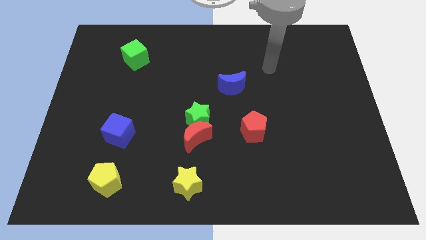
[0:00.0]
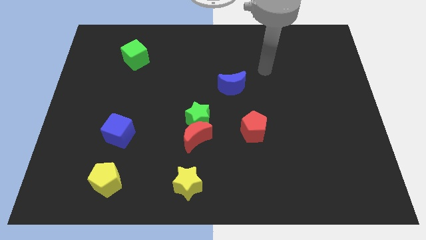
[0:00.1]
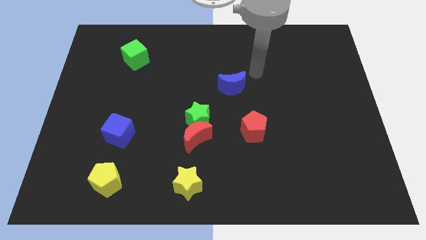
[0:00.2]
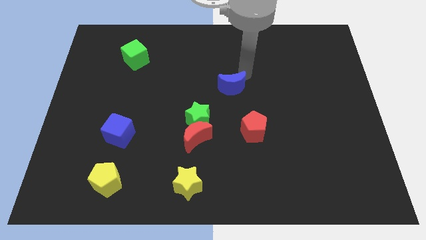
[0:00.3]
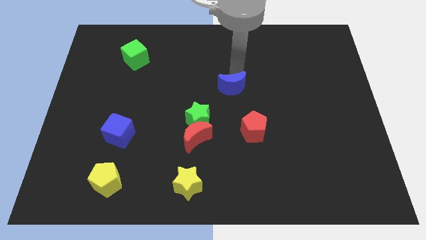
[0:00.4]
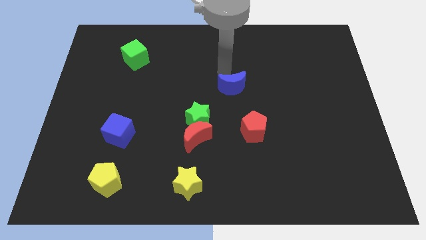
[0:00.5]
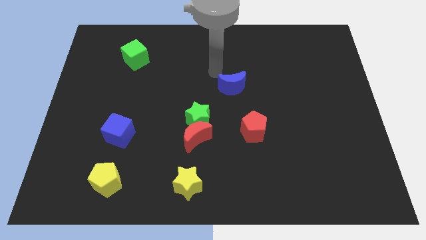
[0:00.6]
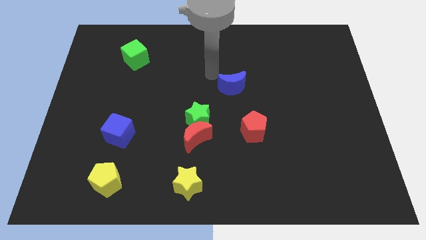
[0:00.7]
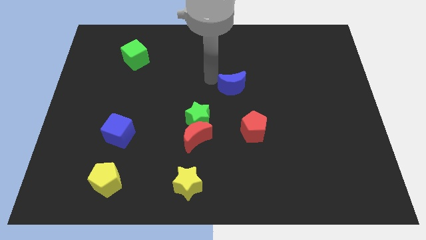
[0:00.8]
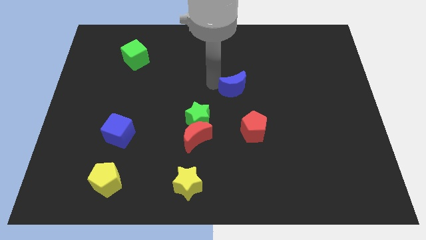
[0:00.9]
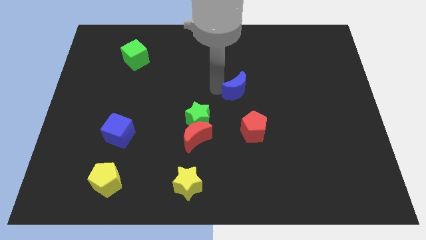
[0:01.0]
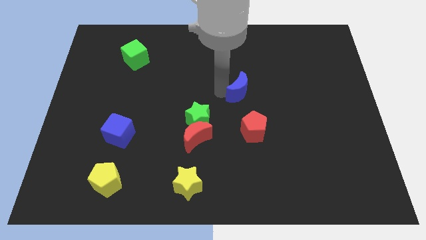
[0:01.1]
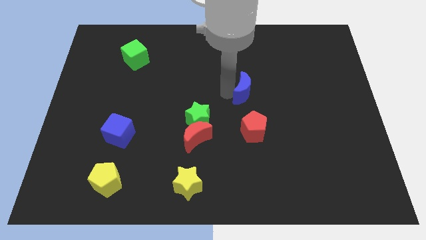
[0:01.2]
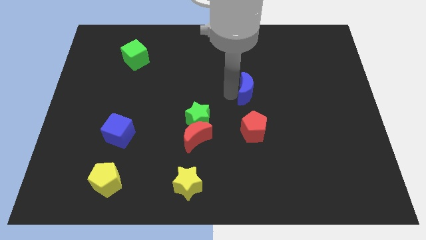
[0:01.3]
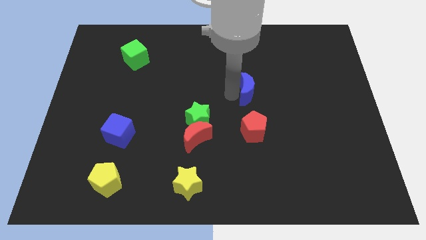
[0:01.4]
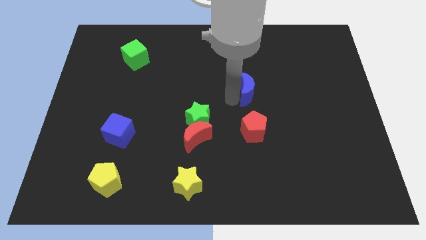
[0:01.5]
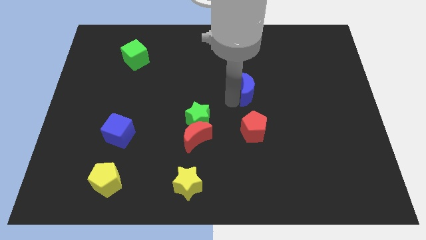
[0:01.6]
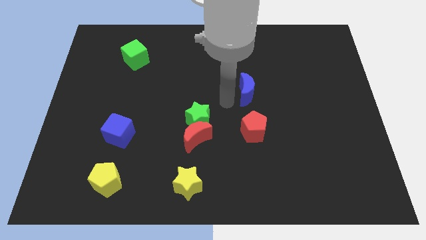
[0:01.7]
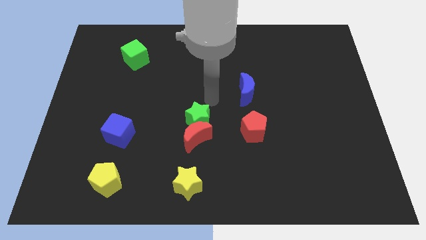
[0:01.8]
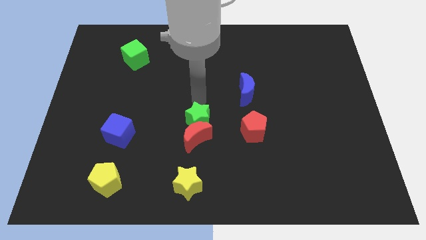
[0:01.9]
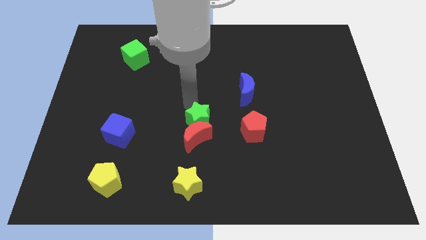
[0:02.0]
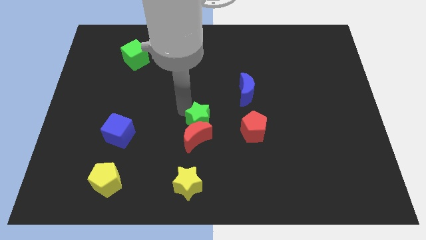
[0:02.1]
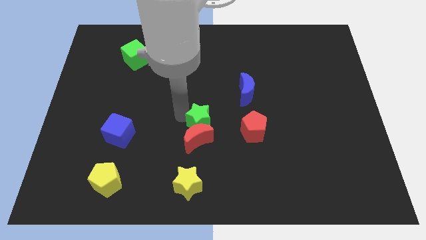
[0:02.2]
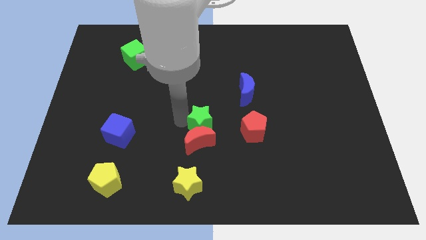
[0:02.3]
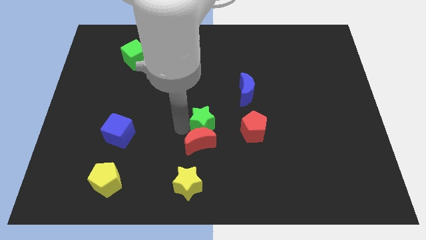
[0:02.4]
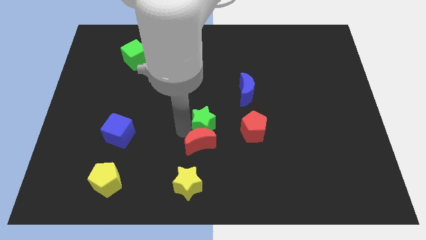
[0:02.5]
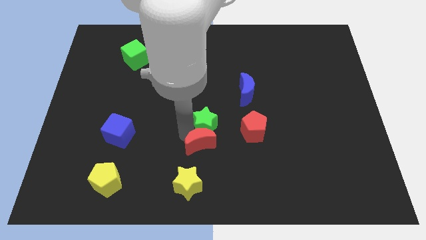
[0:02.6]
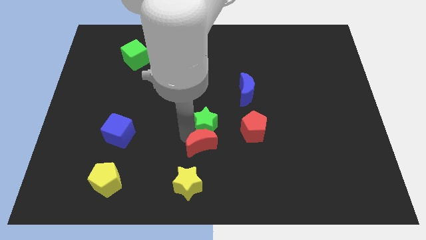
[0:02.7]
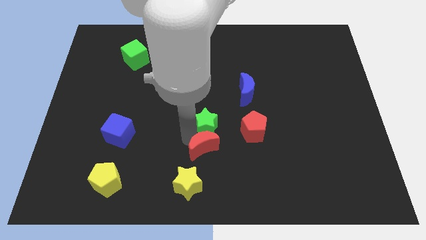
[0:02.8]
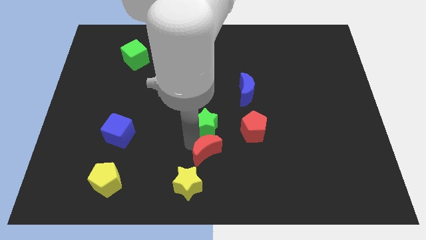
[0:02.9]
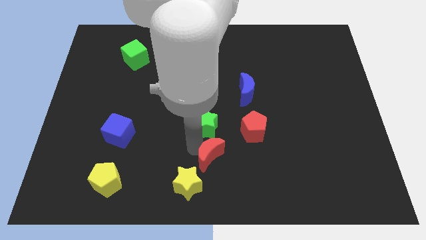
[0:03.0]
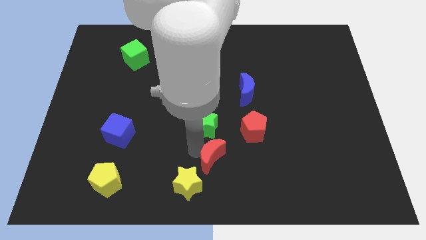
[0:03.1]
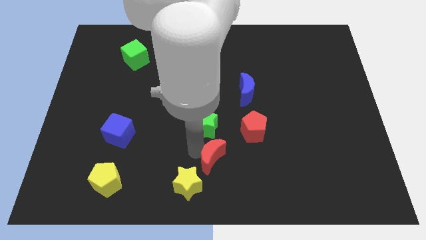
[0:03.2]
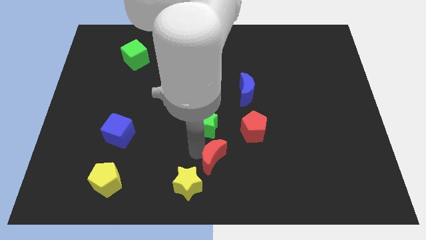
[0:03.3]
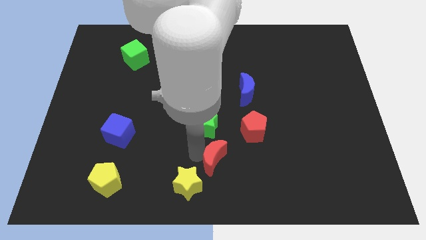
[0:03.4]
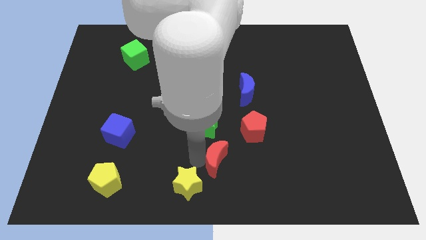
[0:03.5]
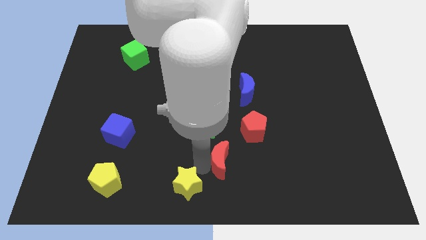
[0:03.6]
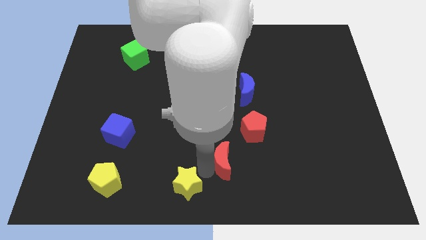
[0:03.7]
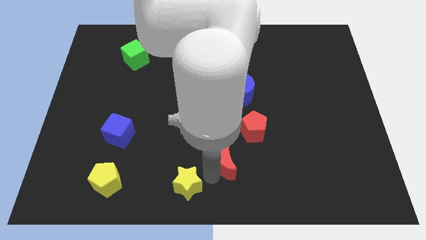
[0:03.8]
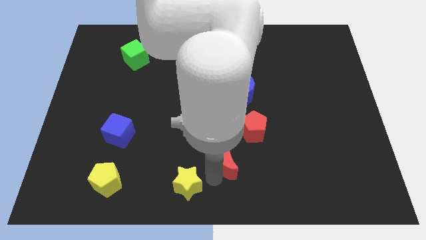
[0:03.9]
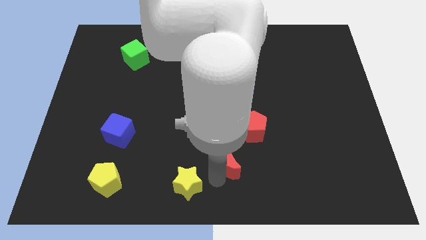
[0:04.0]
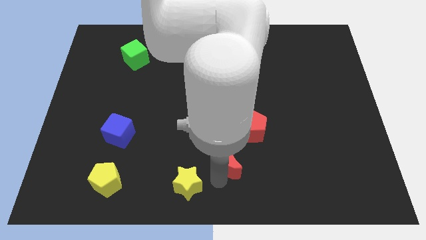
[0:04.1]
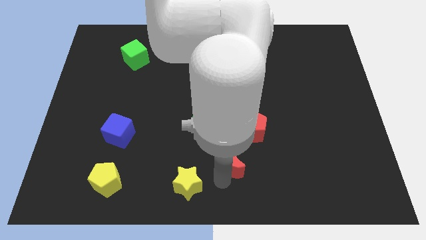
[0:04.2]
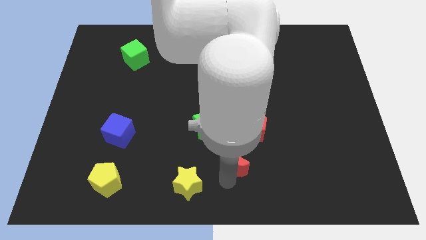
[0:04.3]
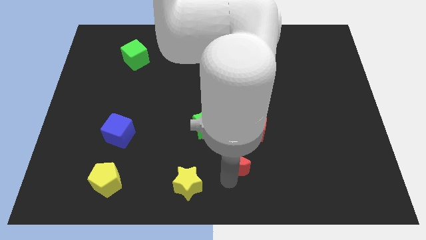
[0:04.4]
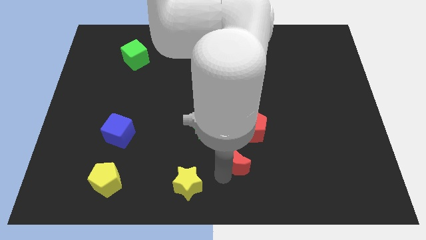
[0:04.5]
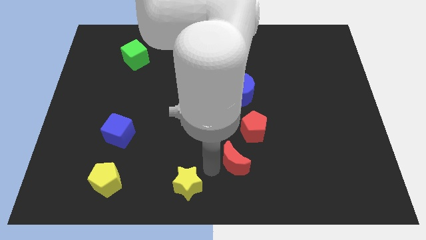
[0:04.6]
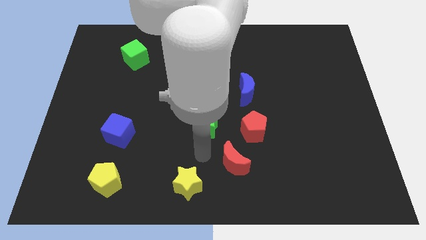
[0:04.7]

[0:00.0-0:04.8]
place red moon to the bottom left of red pentagon

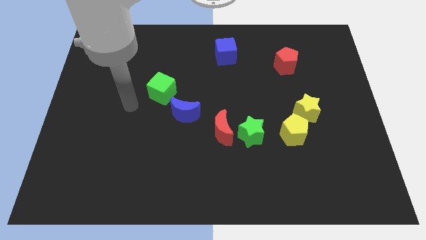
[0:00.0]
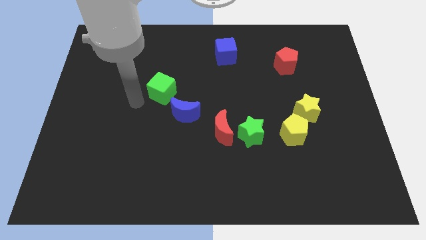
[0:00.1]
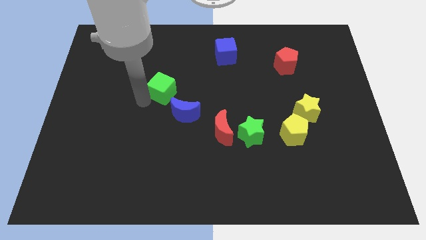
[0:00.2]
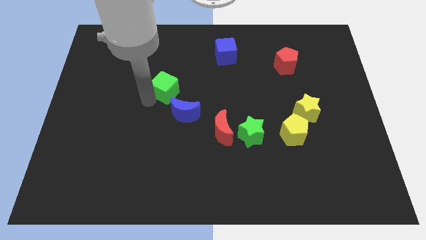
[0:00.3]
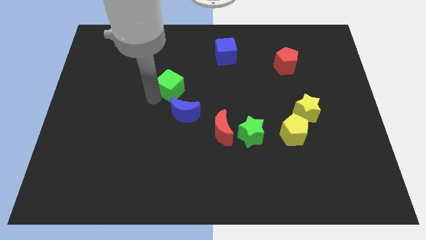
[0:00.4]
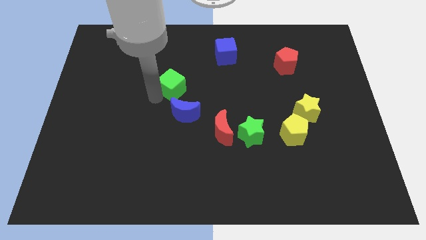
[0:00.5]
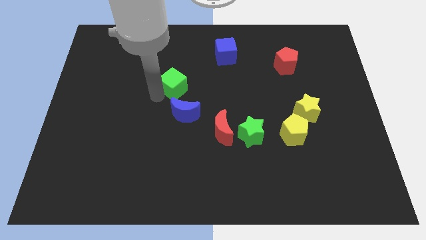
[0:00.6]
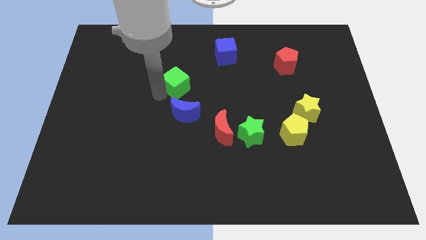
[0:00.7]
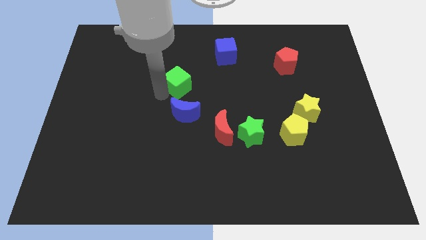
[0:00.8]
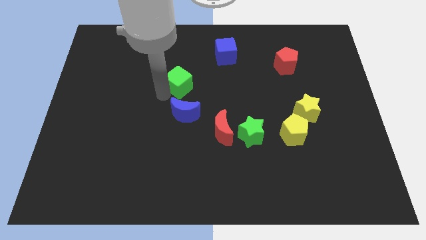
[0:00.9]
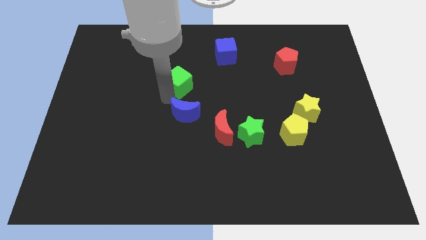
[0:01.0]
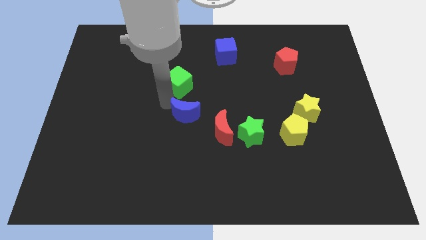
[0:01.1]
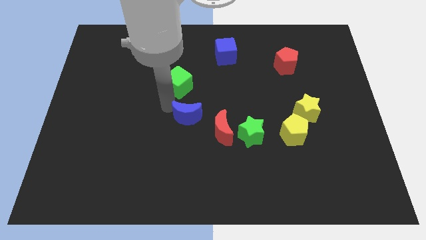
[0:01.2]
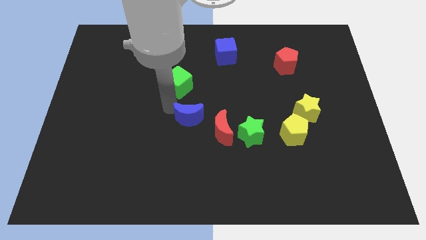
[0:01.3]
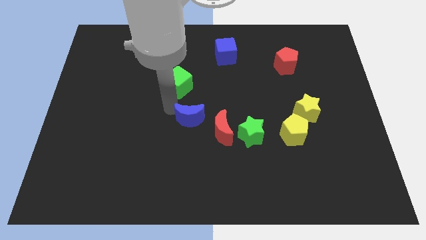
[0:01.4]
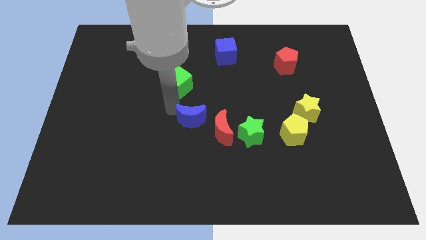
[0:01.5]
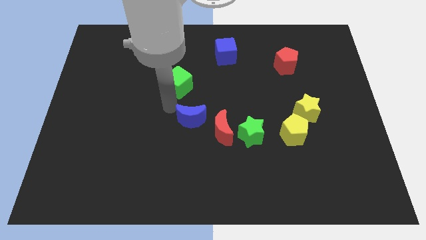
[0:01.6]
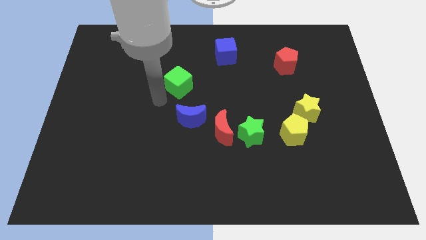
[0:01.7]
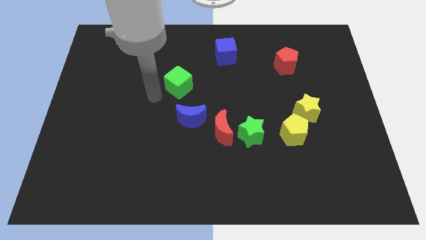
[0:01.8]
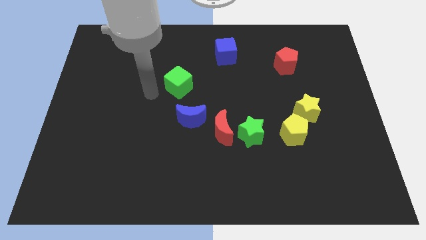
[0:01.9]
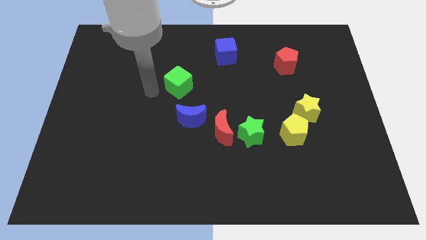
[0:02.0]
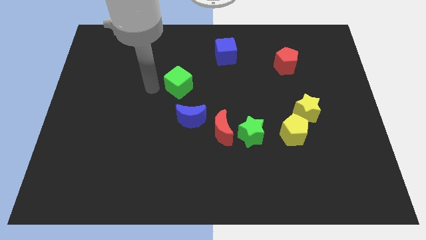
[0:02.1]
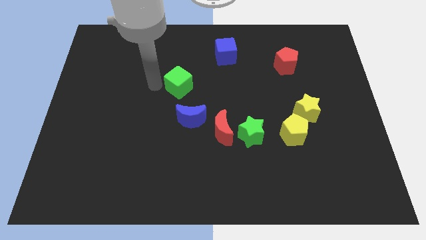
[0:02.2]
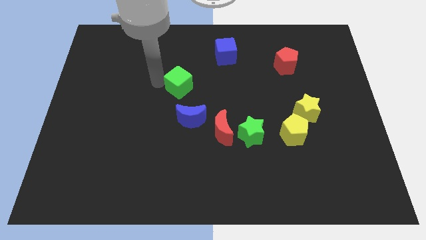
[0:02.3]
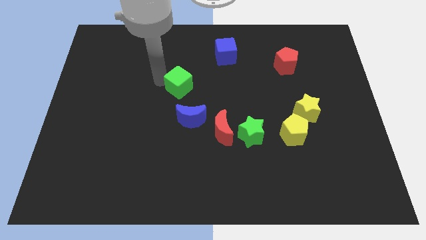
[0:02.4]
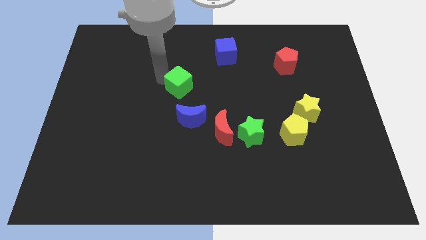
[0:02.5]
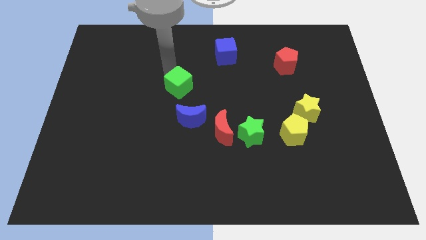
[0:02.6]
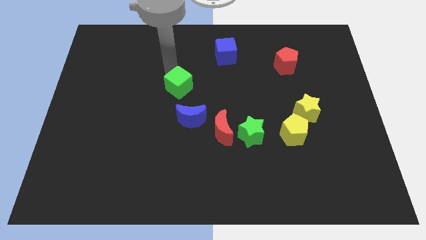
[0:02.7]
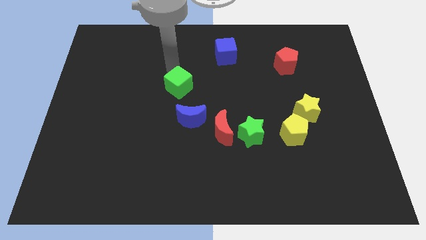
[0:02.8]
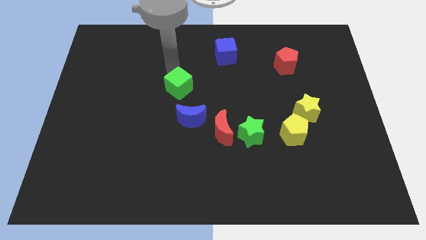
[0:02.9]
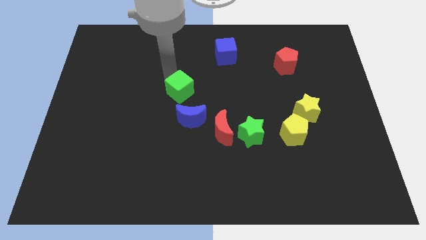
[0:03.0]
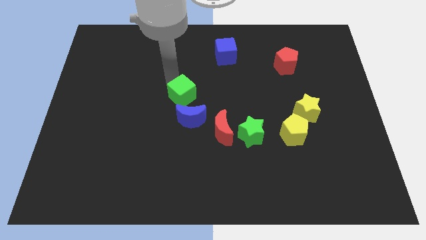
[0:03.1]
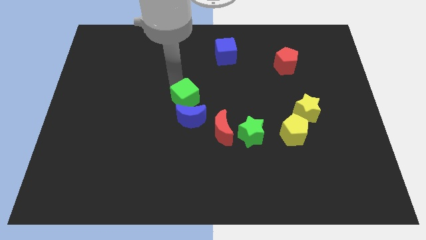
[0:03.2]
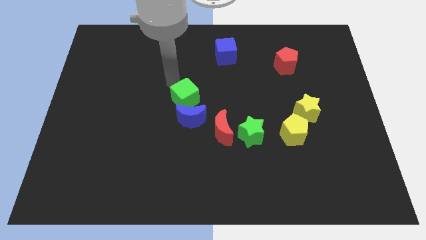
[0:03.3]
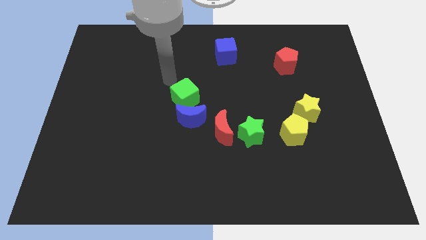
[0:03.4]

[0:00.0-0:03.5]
move green cube slightly down

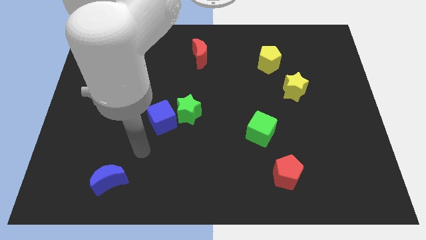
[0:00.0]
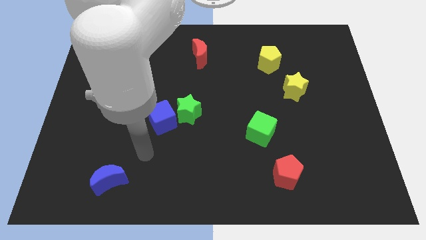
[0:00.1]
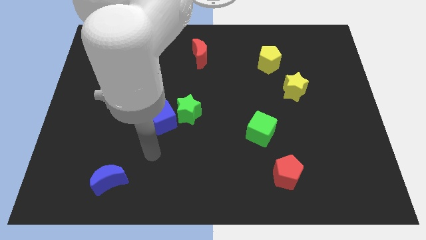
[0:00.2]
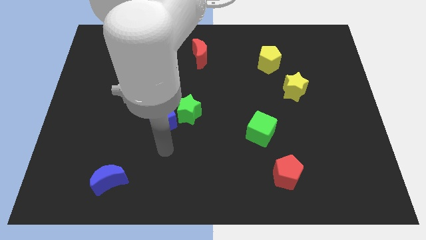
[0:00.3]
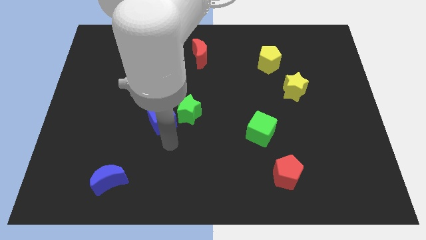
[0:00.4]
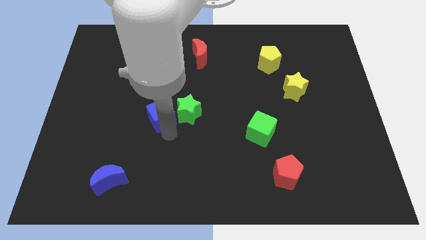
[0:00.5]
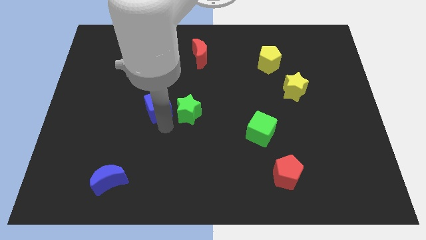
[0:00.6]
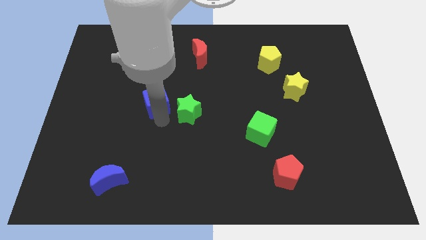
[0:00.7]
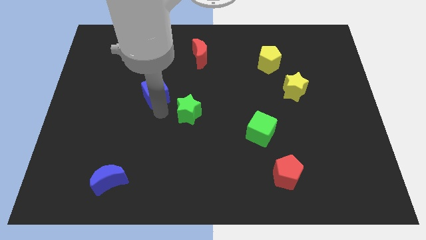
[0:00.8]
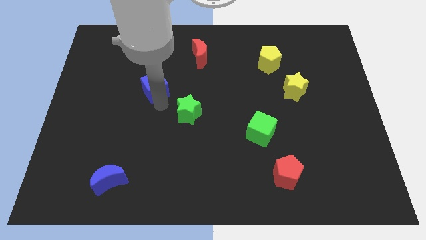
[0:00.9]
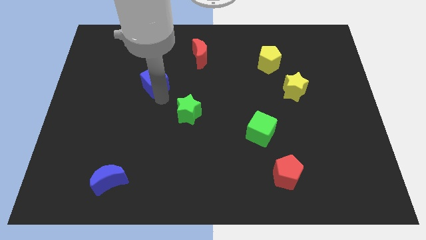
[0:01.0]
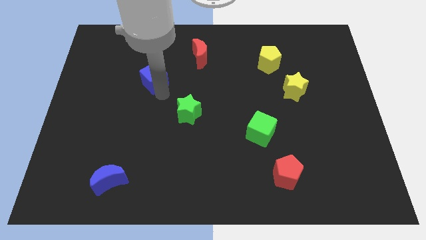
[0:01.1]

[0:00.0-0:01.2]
slightly push blue cube upwards
